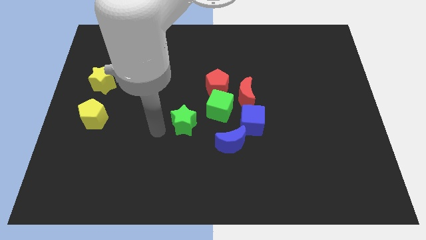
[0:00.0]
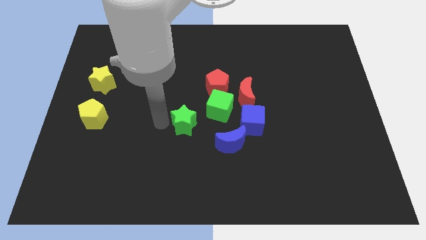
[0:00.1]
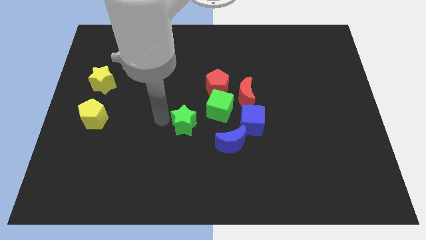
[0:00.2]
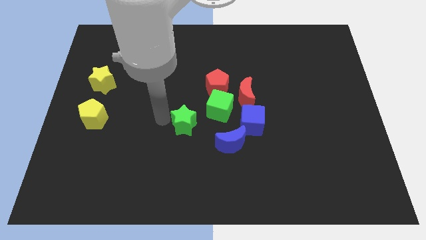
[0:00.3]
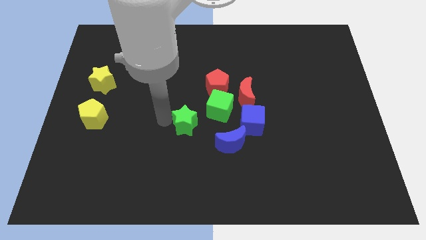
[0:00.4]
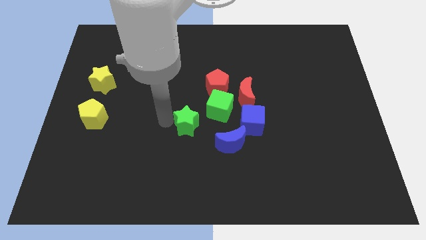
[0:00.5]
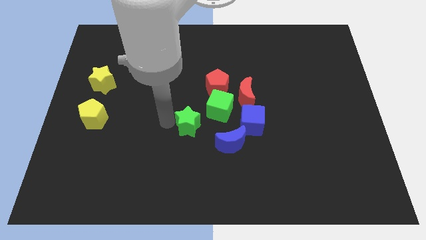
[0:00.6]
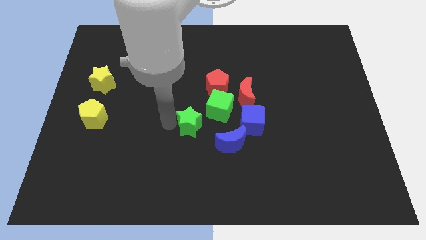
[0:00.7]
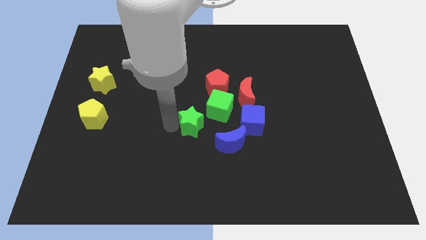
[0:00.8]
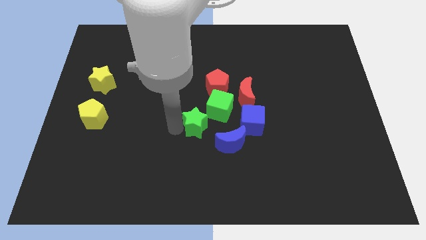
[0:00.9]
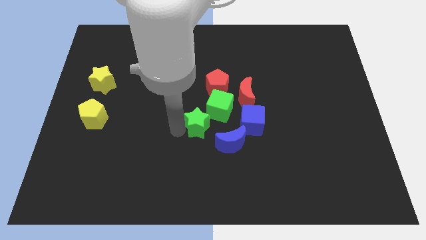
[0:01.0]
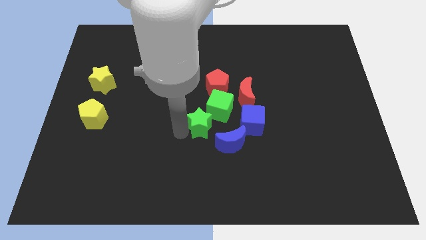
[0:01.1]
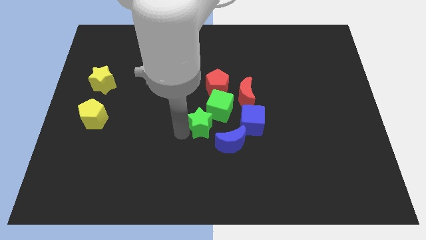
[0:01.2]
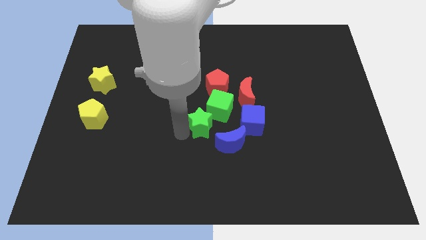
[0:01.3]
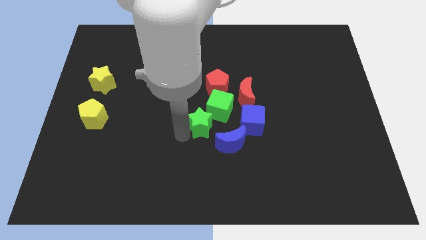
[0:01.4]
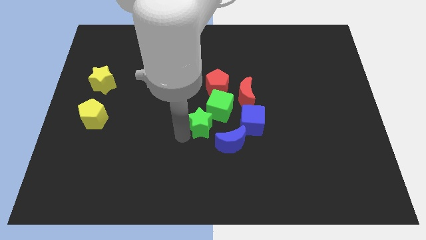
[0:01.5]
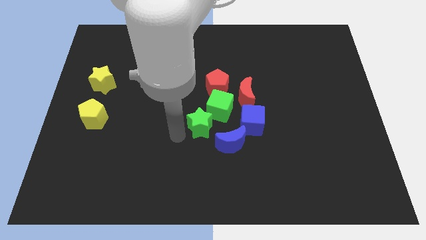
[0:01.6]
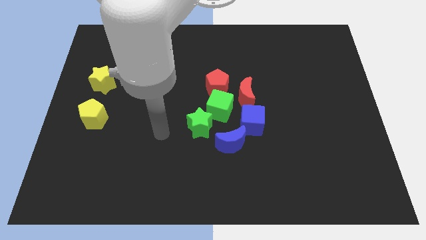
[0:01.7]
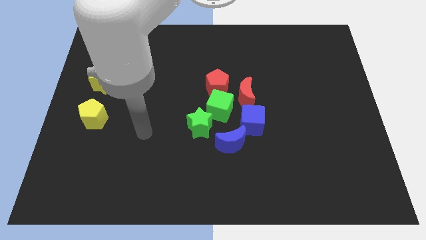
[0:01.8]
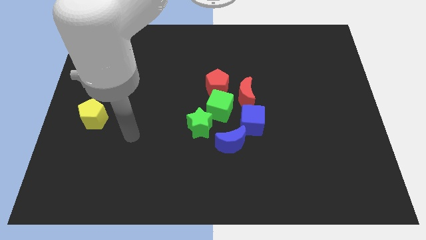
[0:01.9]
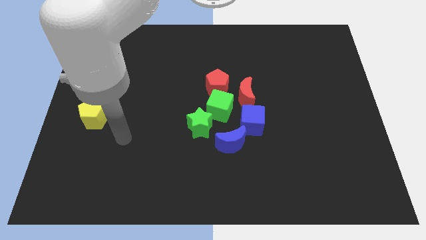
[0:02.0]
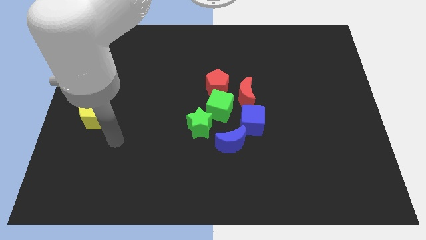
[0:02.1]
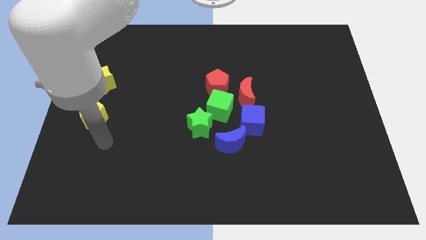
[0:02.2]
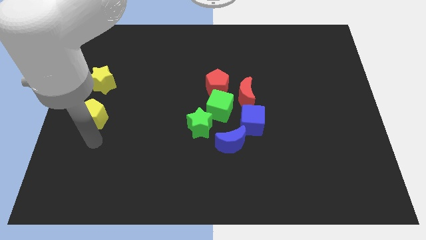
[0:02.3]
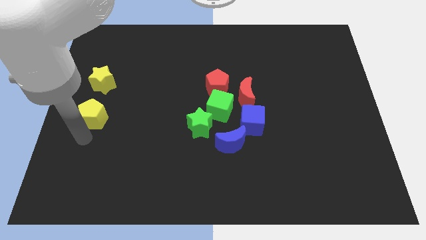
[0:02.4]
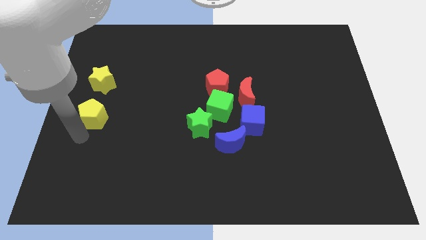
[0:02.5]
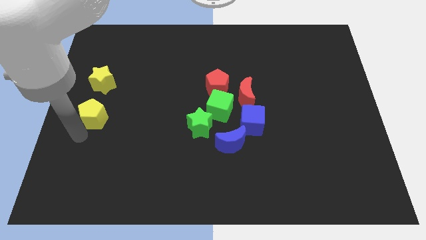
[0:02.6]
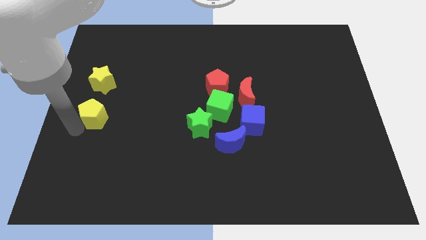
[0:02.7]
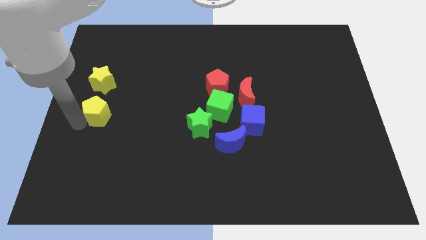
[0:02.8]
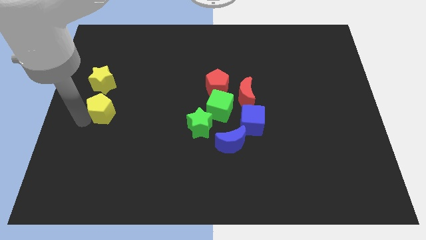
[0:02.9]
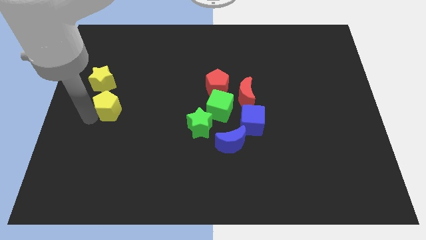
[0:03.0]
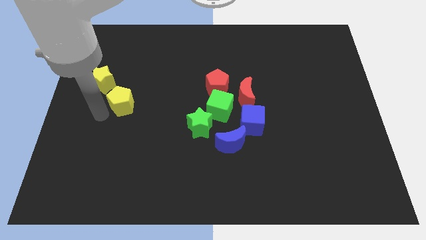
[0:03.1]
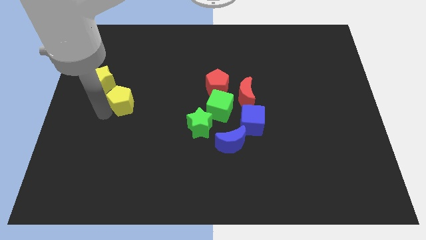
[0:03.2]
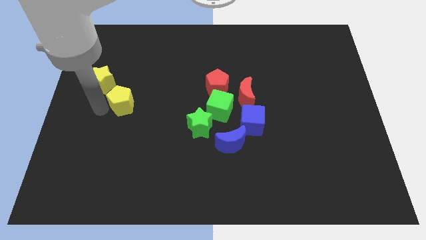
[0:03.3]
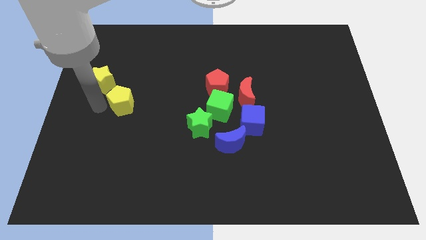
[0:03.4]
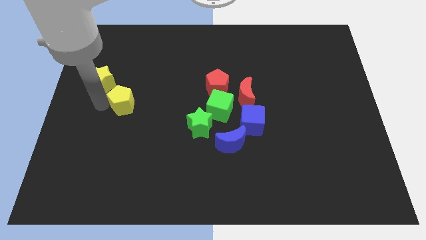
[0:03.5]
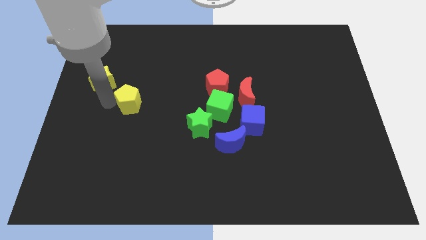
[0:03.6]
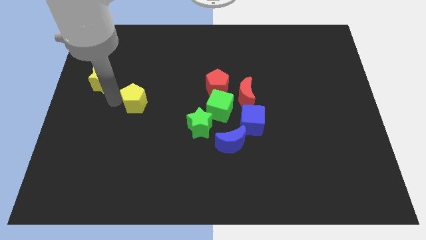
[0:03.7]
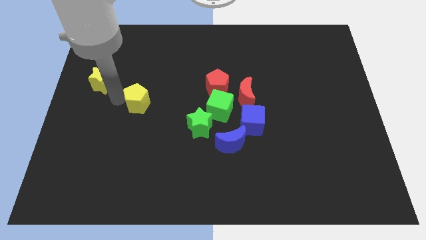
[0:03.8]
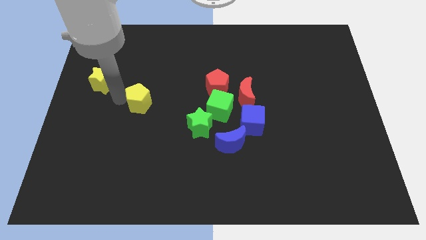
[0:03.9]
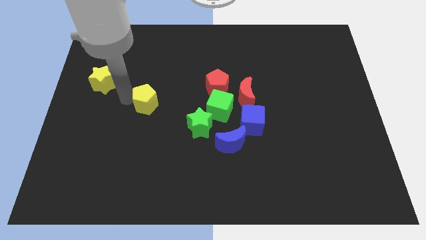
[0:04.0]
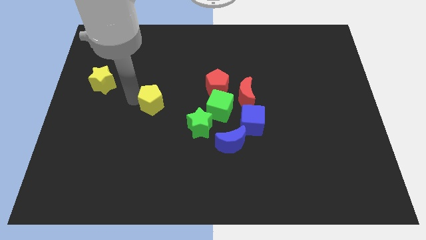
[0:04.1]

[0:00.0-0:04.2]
place the yellow pentagon in between the yellow star and green star

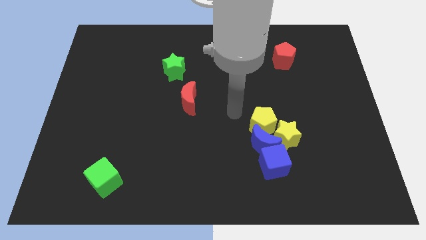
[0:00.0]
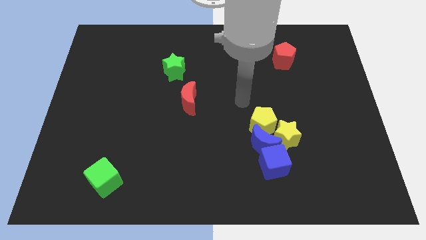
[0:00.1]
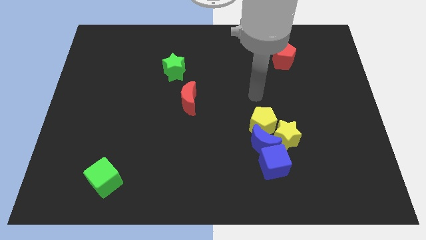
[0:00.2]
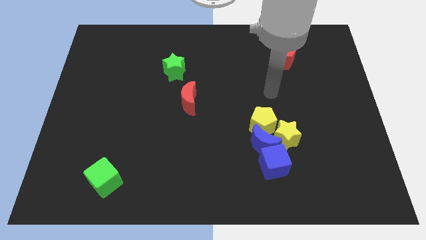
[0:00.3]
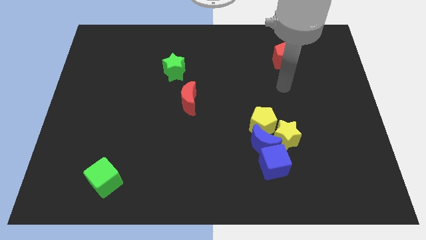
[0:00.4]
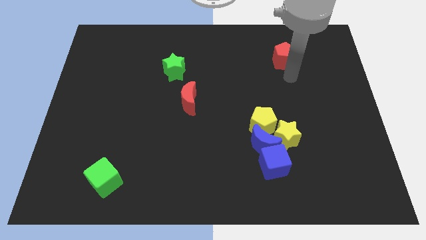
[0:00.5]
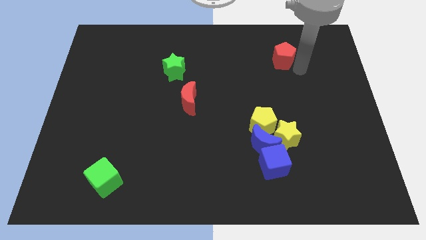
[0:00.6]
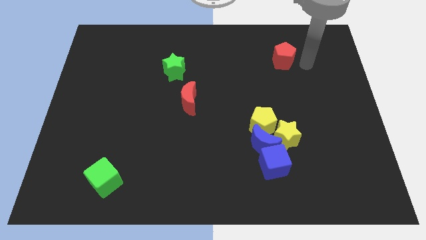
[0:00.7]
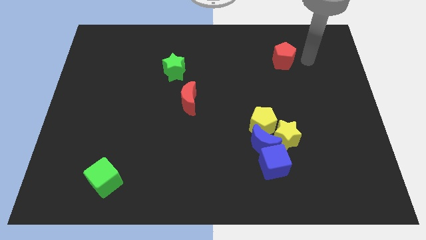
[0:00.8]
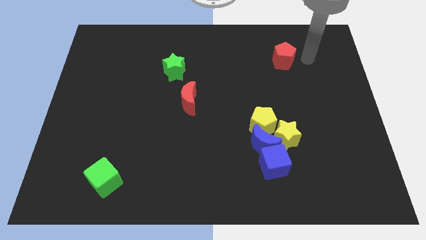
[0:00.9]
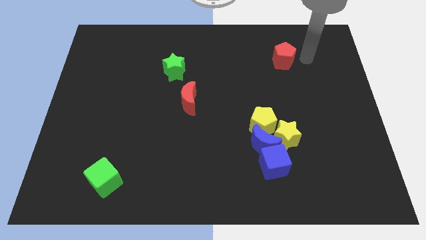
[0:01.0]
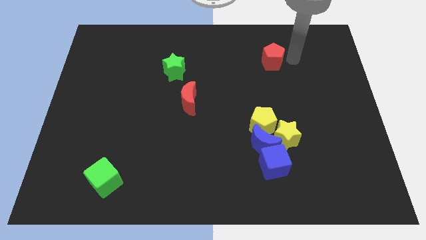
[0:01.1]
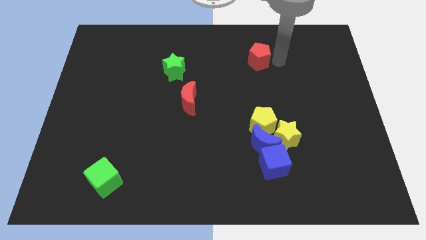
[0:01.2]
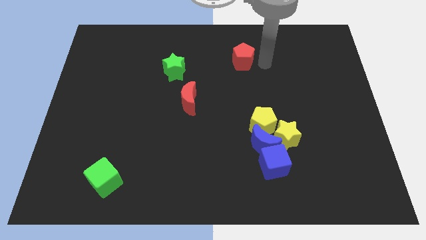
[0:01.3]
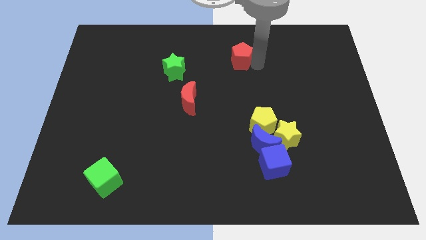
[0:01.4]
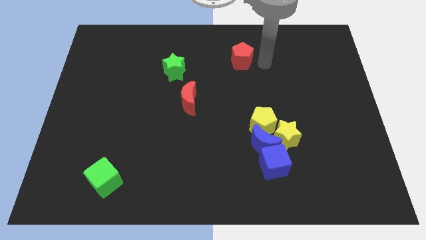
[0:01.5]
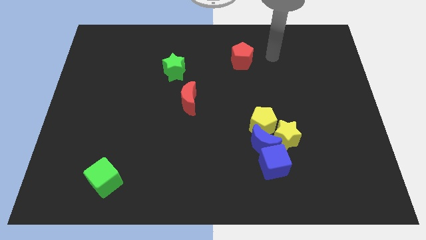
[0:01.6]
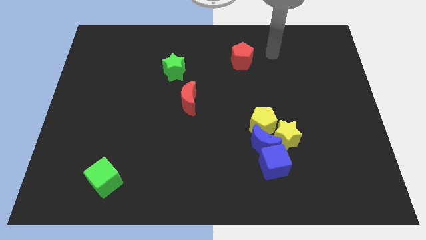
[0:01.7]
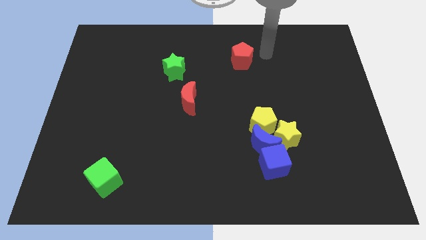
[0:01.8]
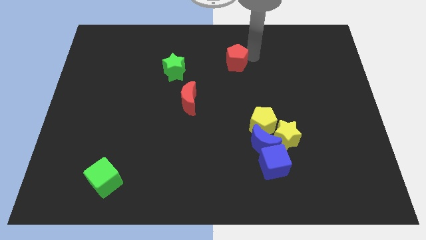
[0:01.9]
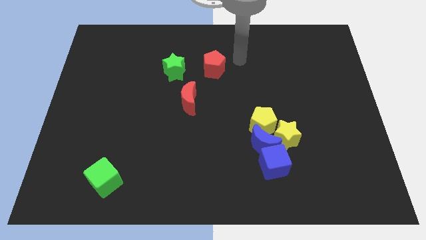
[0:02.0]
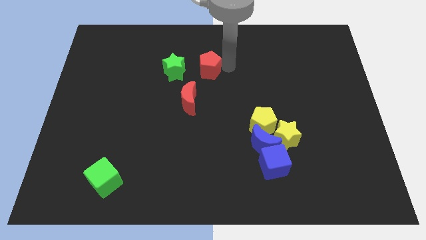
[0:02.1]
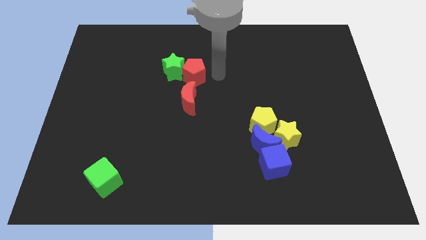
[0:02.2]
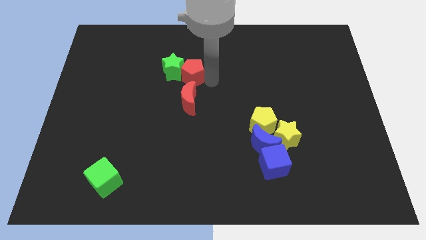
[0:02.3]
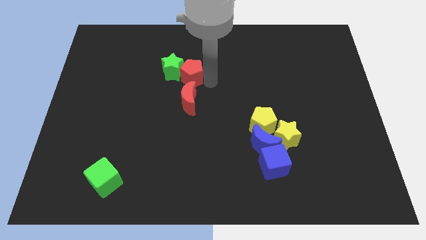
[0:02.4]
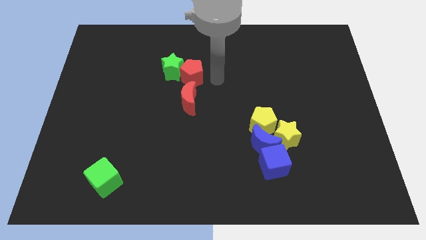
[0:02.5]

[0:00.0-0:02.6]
move the red pentagon right beside the green star

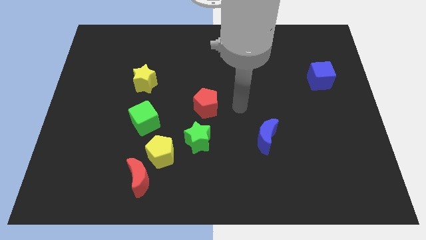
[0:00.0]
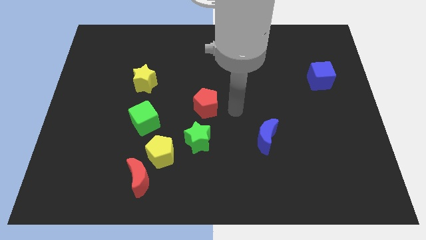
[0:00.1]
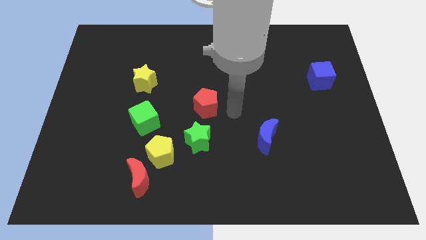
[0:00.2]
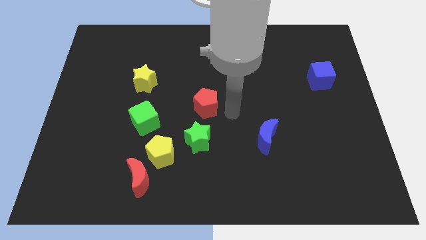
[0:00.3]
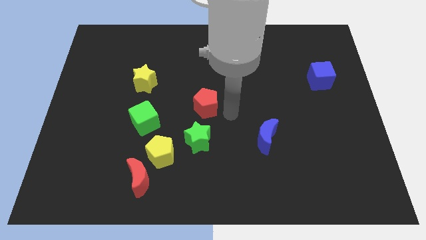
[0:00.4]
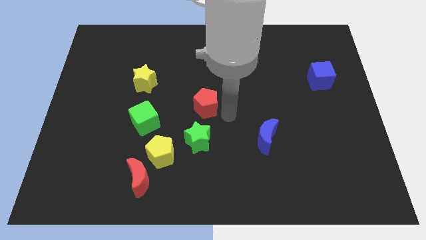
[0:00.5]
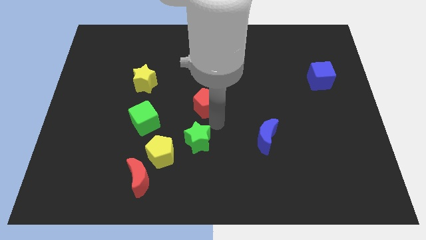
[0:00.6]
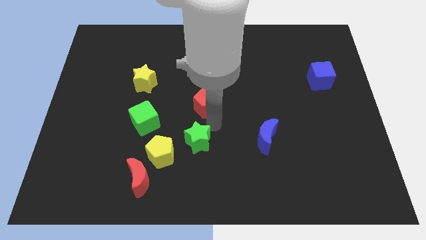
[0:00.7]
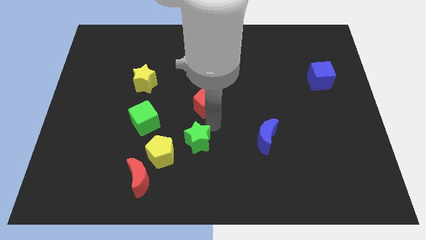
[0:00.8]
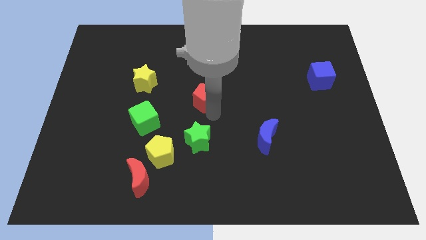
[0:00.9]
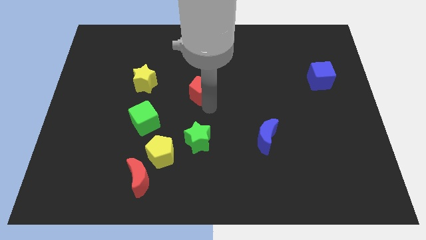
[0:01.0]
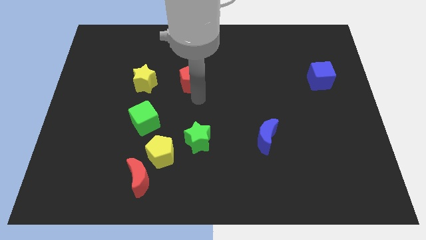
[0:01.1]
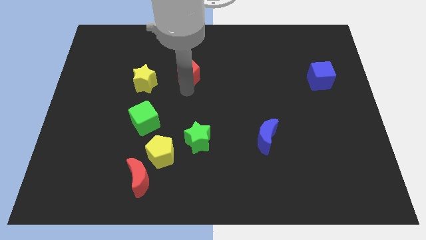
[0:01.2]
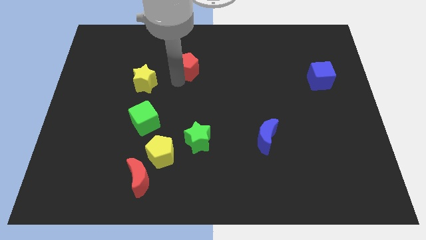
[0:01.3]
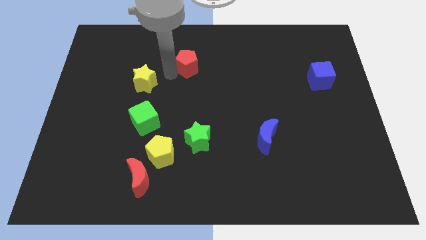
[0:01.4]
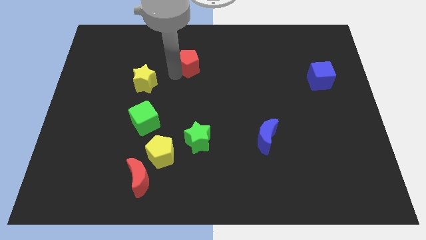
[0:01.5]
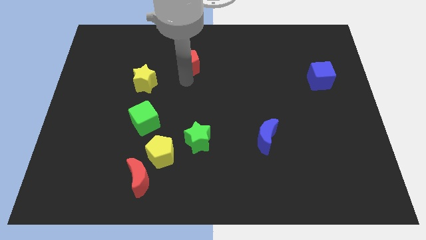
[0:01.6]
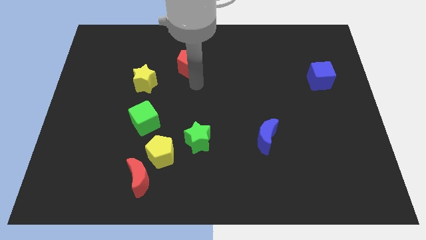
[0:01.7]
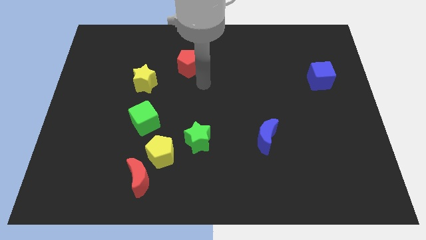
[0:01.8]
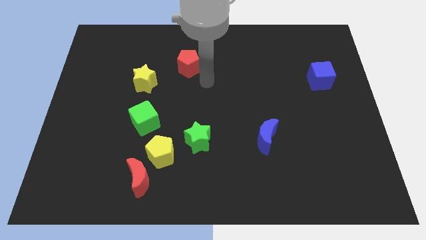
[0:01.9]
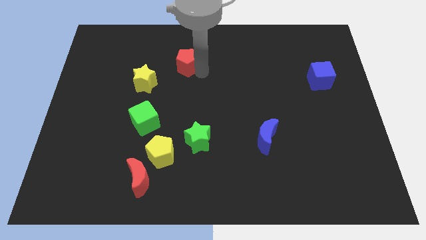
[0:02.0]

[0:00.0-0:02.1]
push the red pentagon to the top right of the yellow star

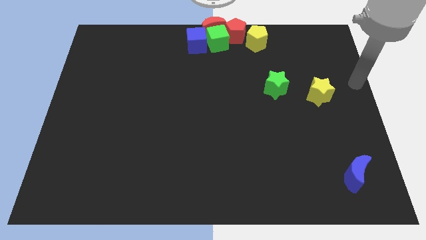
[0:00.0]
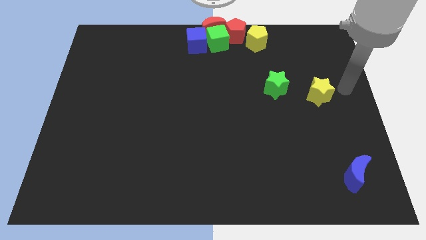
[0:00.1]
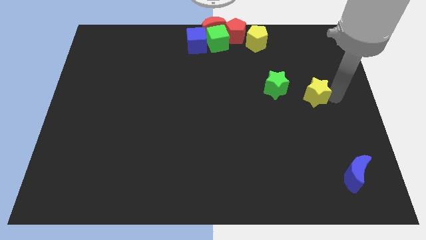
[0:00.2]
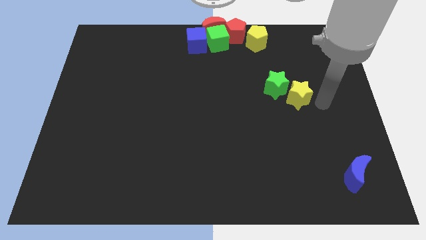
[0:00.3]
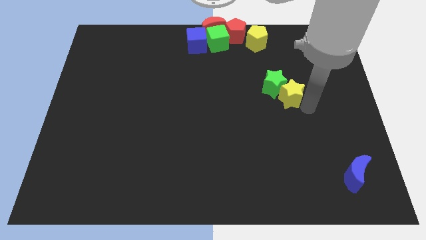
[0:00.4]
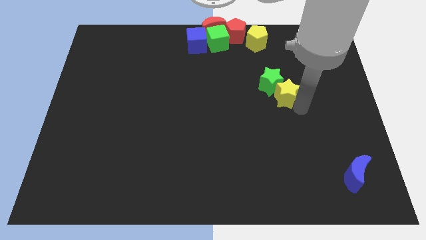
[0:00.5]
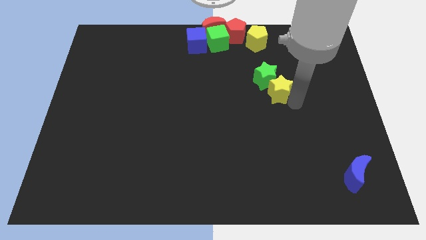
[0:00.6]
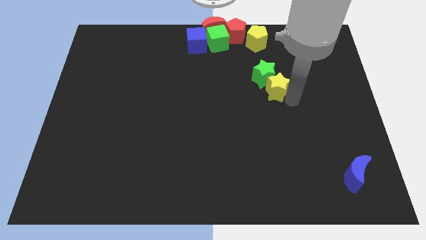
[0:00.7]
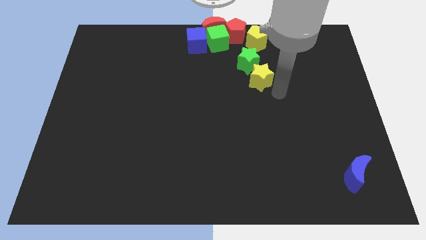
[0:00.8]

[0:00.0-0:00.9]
place the yellow star below the green star
